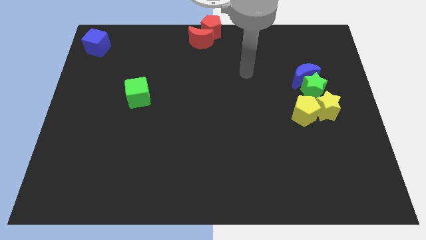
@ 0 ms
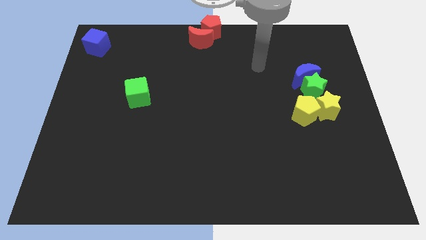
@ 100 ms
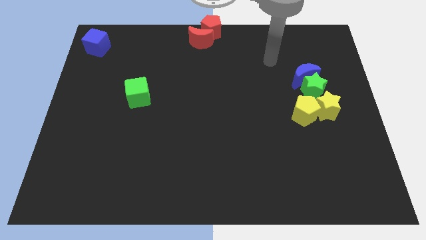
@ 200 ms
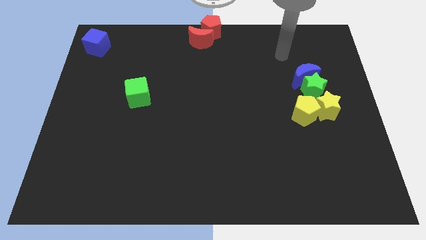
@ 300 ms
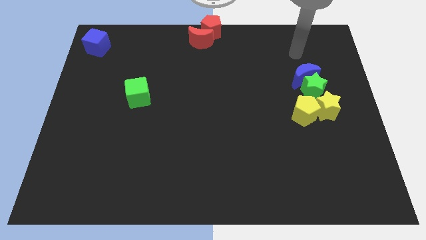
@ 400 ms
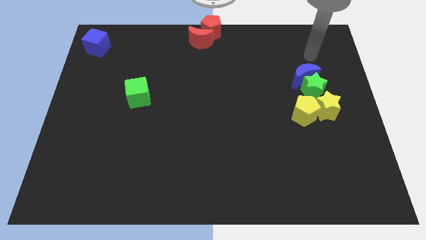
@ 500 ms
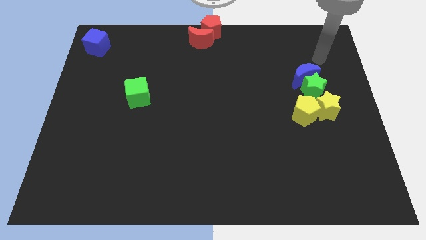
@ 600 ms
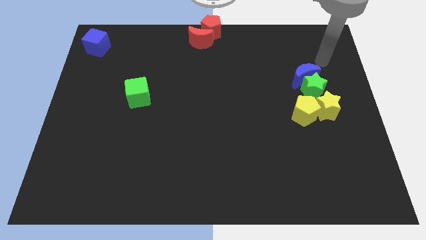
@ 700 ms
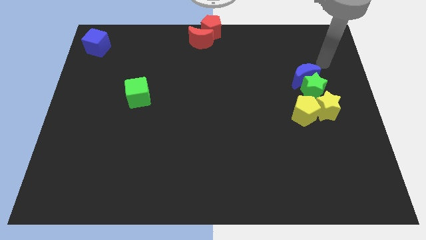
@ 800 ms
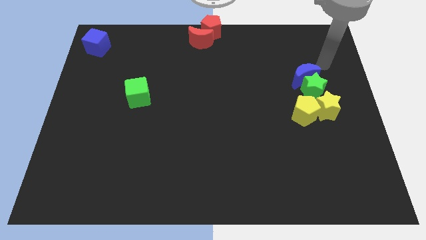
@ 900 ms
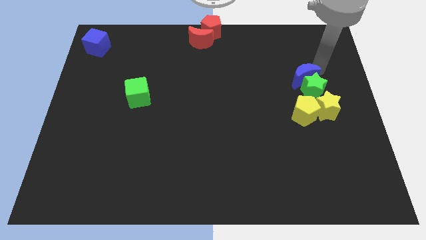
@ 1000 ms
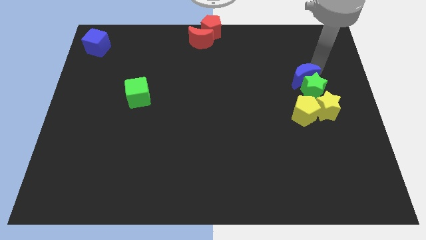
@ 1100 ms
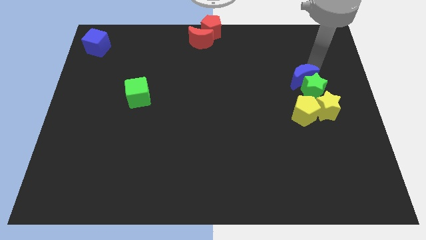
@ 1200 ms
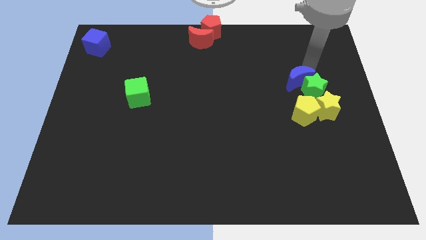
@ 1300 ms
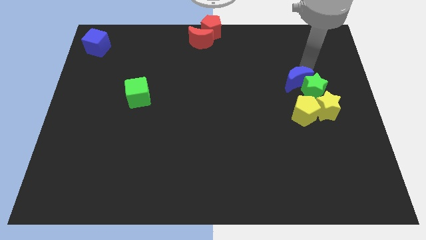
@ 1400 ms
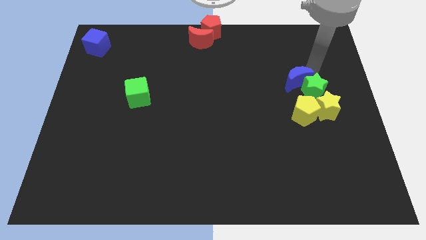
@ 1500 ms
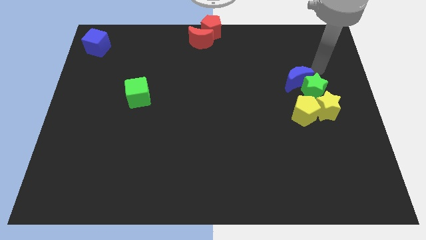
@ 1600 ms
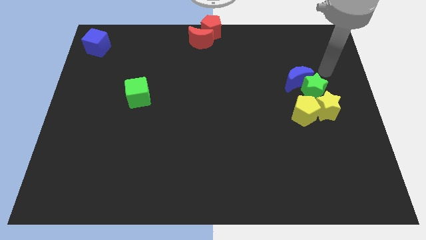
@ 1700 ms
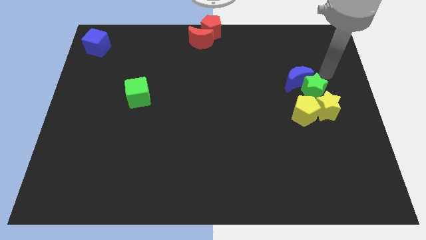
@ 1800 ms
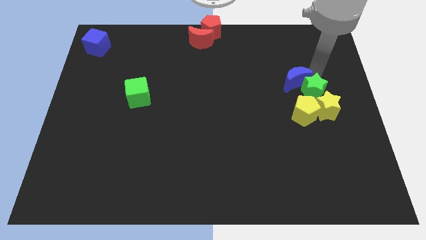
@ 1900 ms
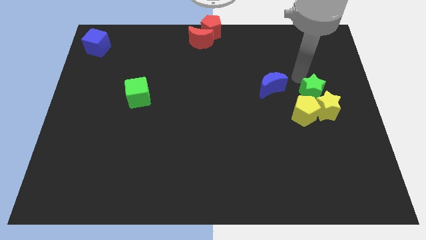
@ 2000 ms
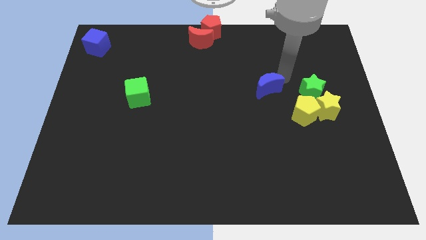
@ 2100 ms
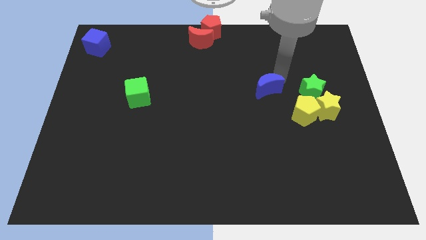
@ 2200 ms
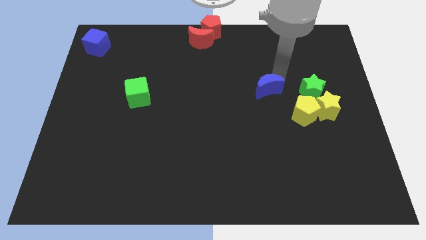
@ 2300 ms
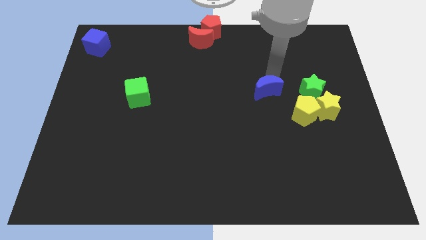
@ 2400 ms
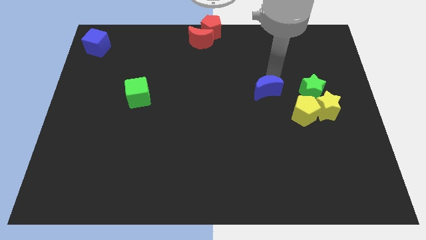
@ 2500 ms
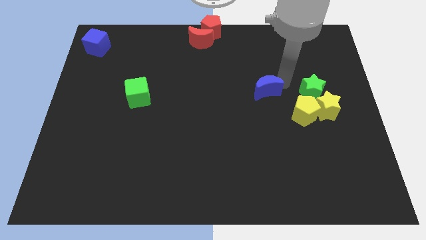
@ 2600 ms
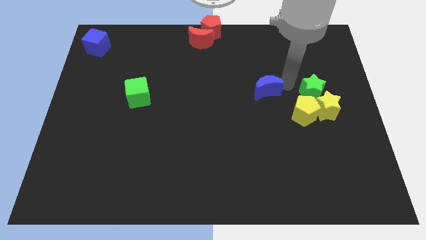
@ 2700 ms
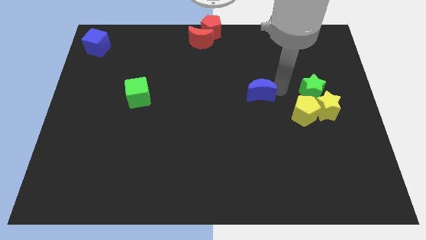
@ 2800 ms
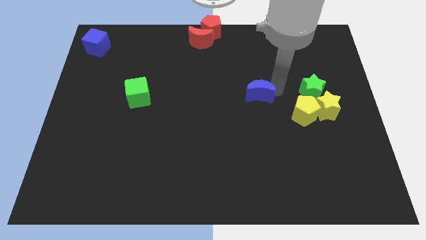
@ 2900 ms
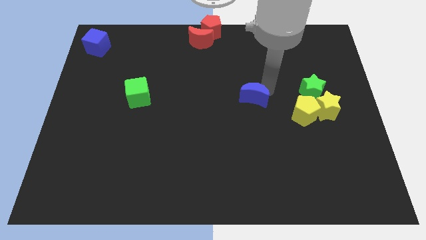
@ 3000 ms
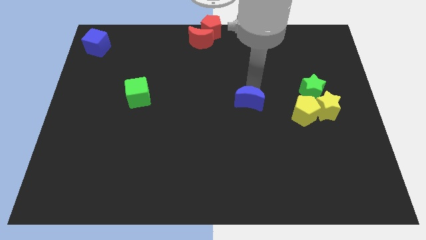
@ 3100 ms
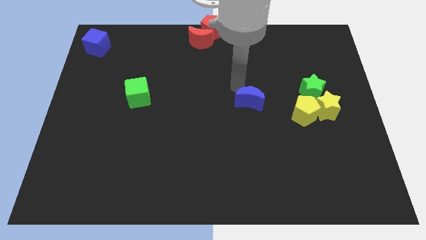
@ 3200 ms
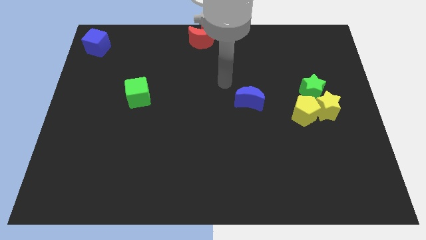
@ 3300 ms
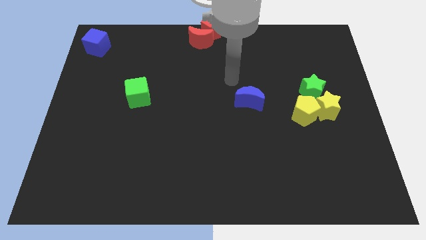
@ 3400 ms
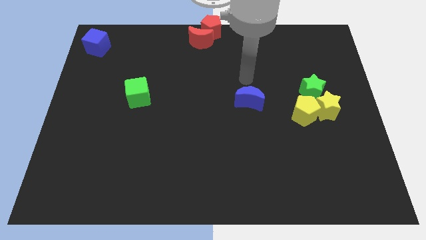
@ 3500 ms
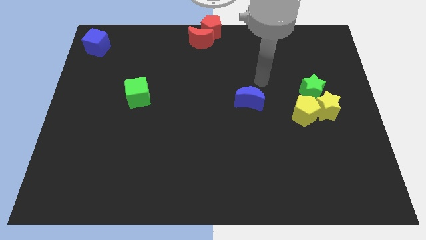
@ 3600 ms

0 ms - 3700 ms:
separate blue moon from green star

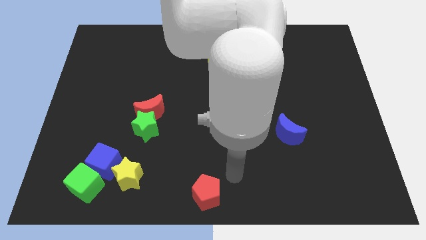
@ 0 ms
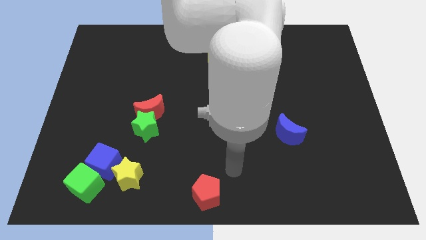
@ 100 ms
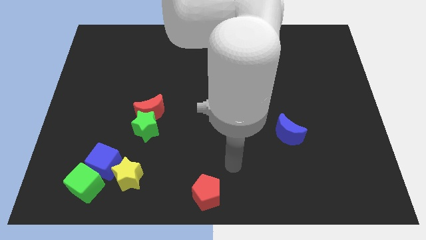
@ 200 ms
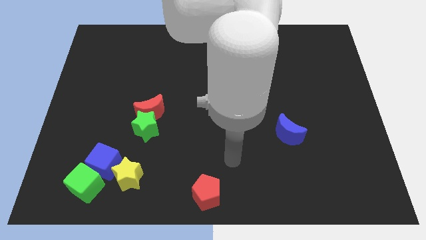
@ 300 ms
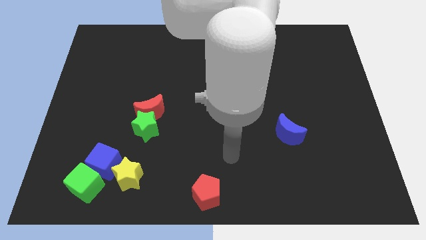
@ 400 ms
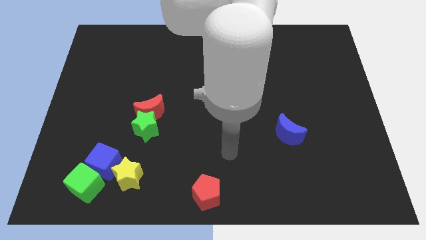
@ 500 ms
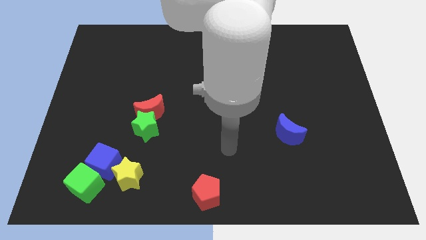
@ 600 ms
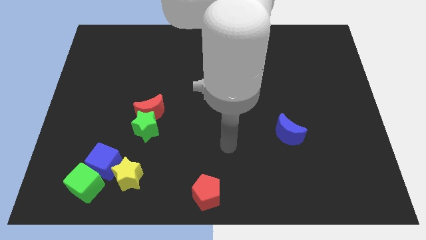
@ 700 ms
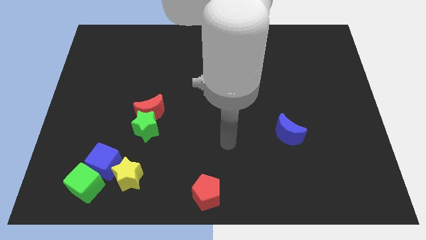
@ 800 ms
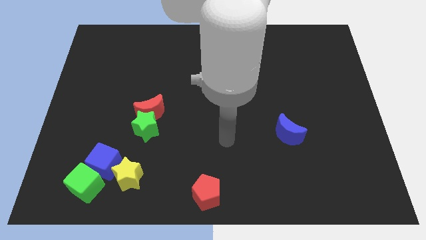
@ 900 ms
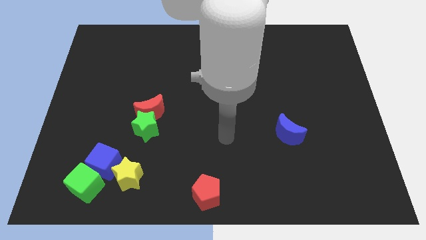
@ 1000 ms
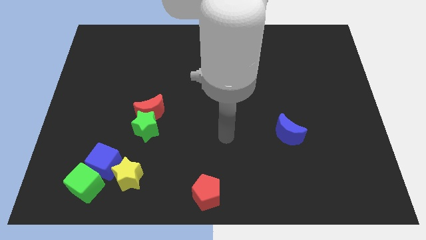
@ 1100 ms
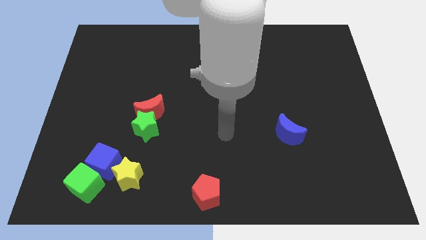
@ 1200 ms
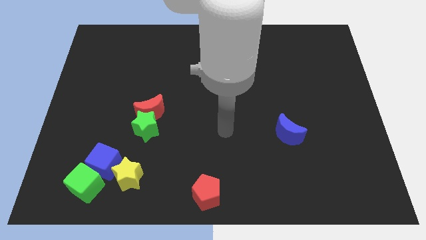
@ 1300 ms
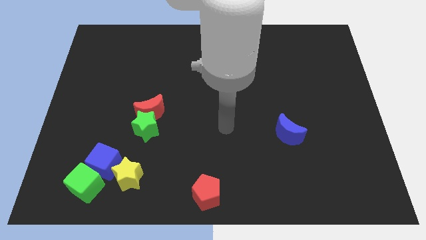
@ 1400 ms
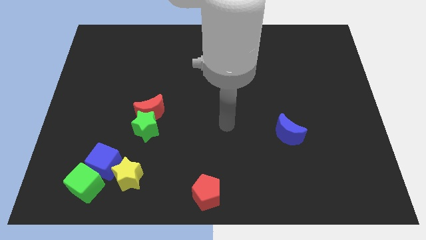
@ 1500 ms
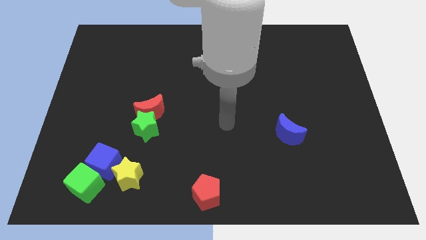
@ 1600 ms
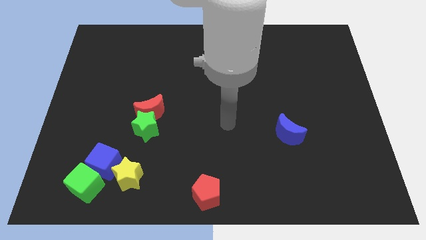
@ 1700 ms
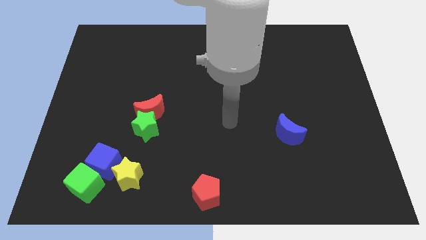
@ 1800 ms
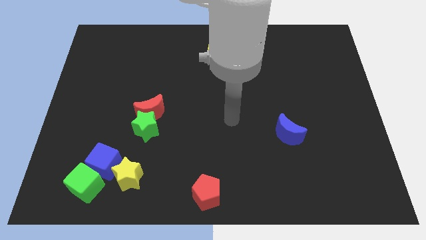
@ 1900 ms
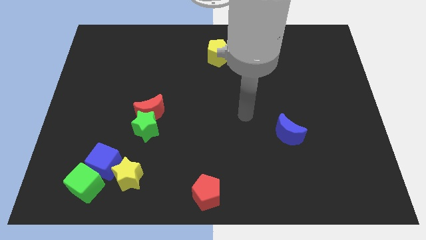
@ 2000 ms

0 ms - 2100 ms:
move the red pentagon to the bottom center

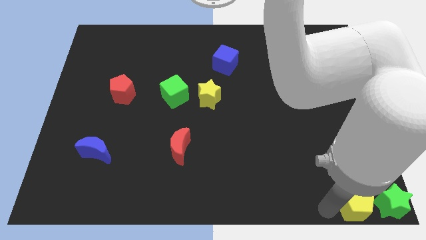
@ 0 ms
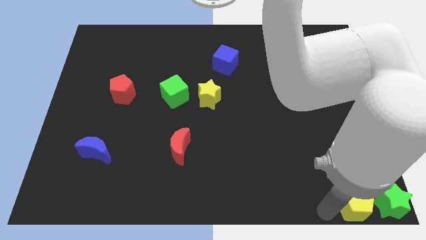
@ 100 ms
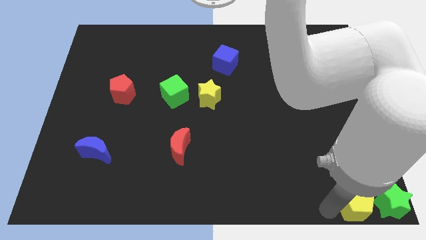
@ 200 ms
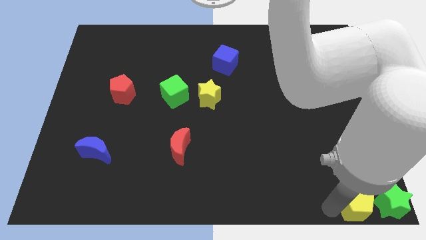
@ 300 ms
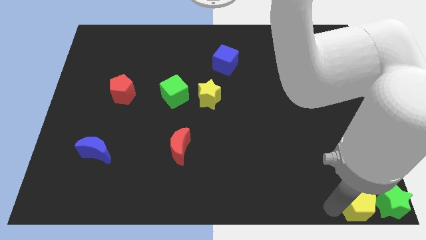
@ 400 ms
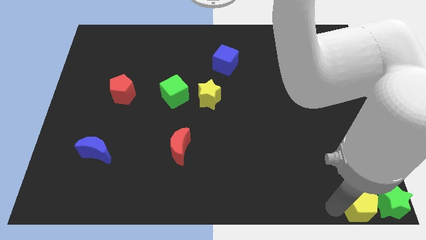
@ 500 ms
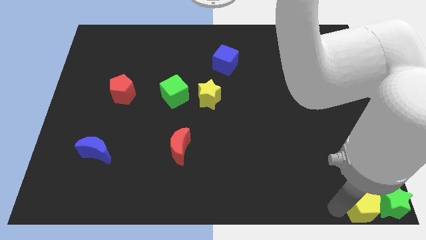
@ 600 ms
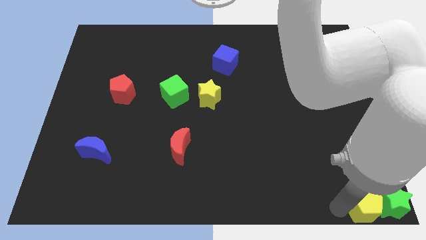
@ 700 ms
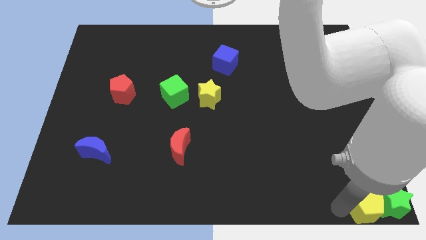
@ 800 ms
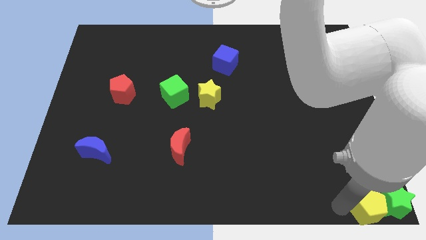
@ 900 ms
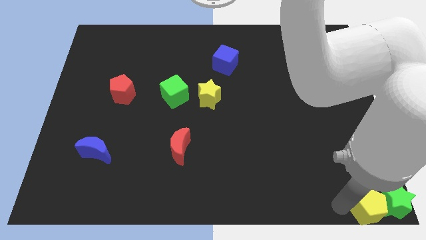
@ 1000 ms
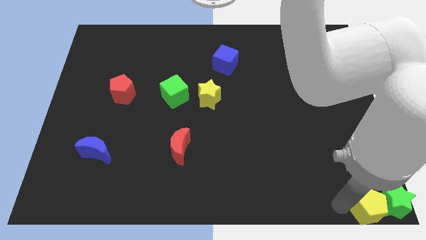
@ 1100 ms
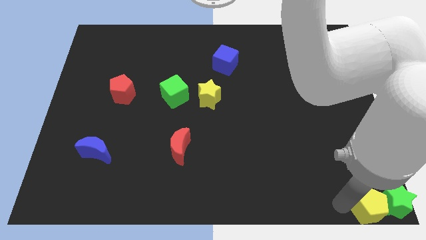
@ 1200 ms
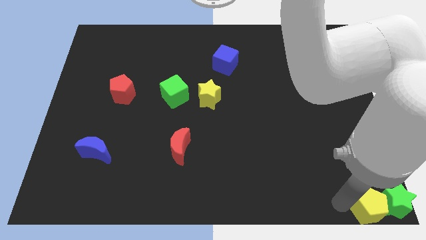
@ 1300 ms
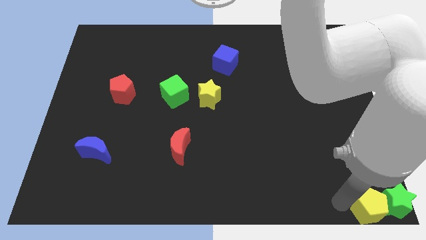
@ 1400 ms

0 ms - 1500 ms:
move the yellow pentagon into the green star

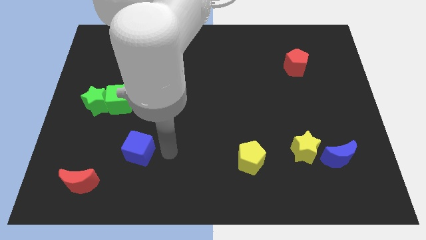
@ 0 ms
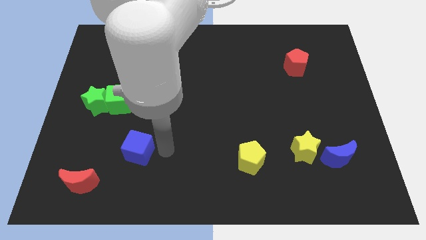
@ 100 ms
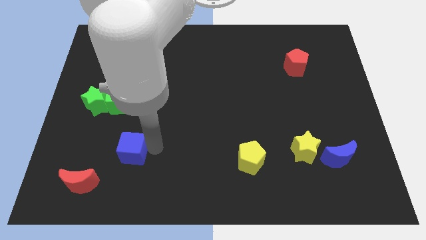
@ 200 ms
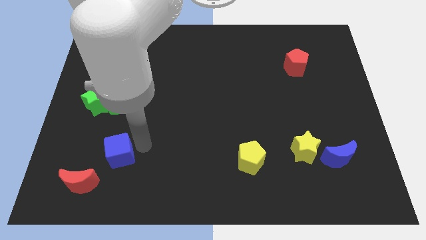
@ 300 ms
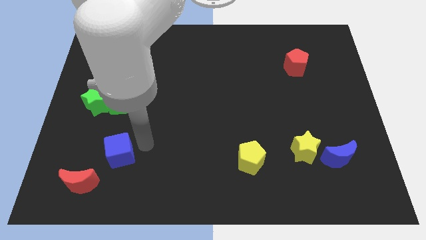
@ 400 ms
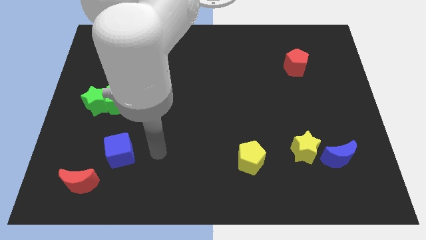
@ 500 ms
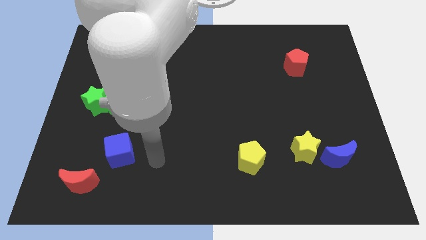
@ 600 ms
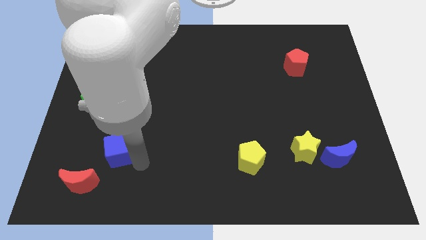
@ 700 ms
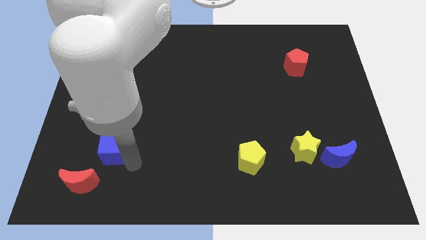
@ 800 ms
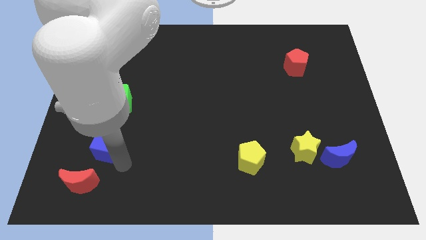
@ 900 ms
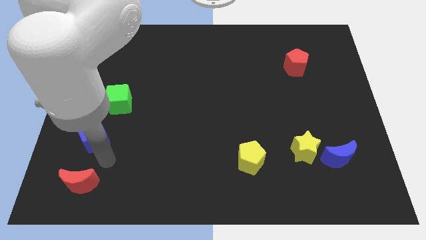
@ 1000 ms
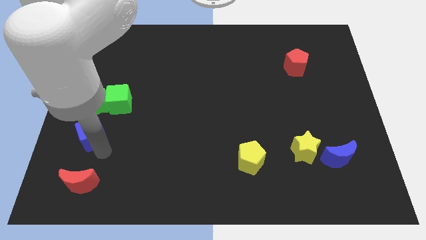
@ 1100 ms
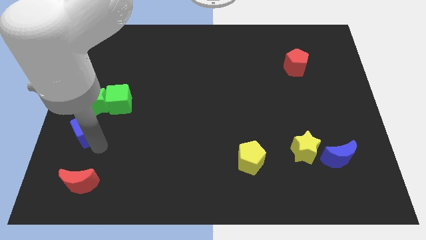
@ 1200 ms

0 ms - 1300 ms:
place the blue cube below the green star

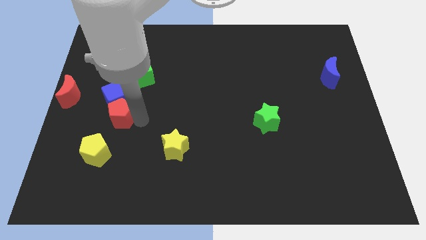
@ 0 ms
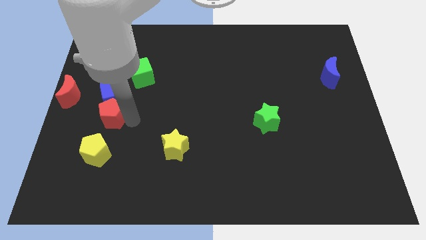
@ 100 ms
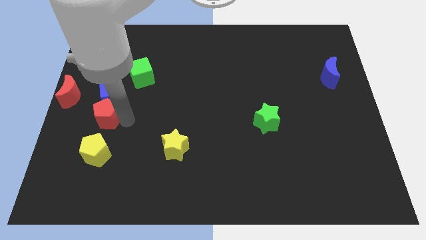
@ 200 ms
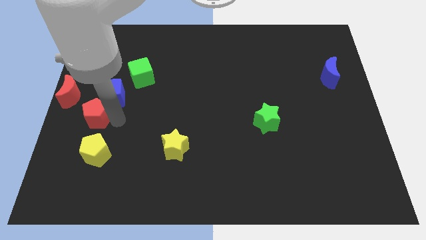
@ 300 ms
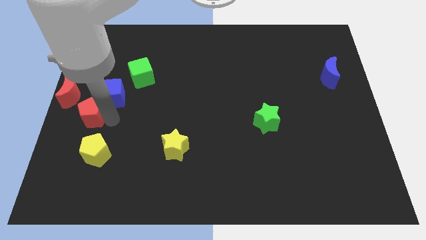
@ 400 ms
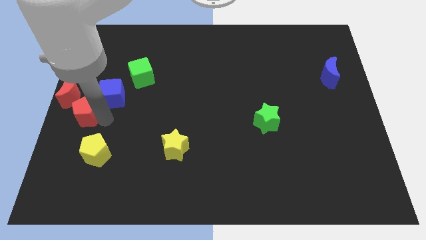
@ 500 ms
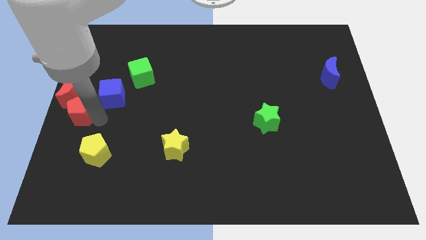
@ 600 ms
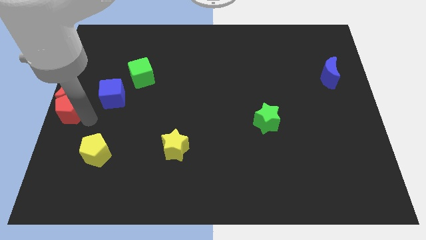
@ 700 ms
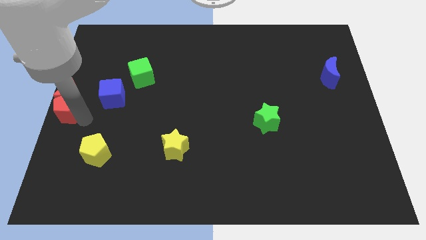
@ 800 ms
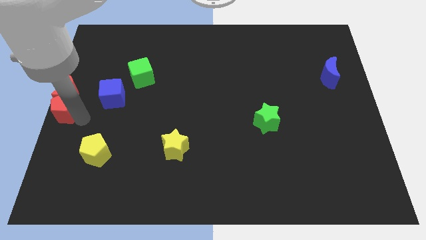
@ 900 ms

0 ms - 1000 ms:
separate red pentagon and blue cube
